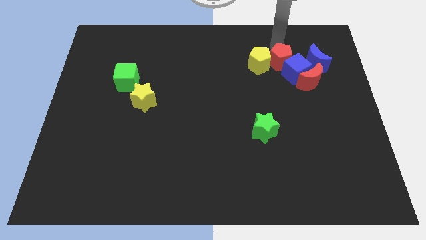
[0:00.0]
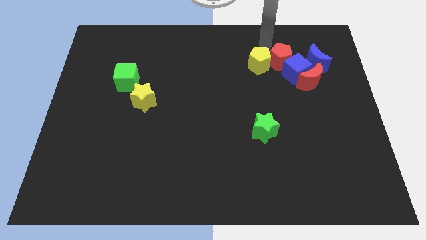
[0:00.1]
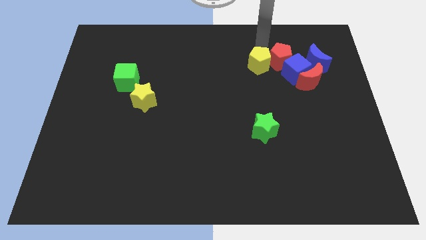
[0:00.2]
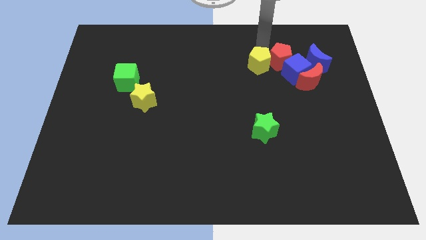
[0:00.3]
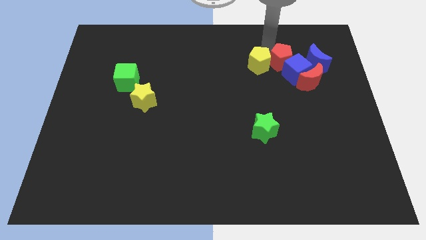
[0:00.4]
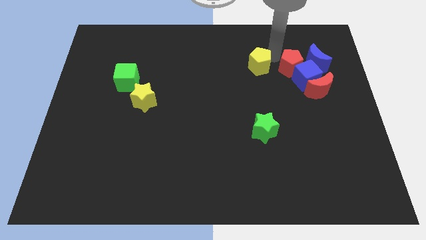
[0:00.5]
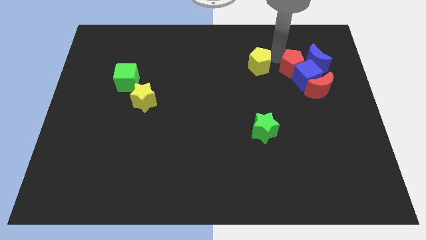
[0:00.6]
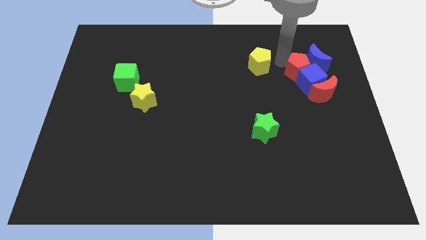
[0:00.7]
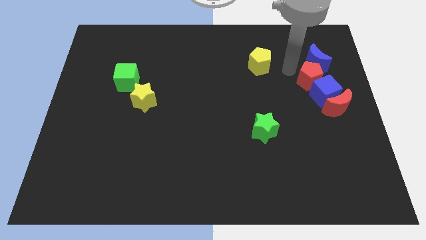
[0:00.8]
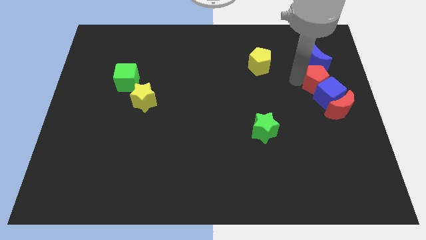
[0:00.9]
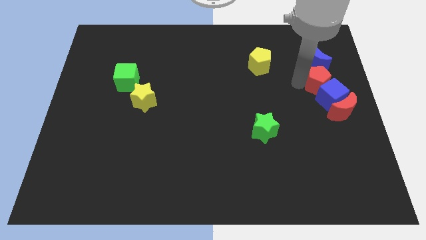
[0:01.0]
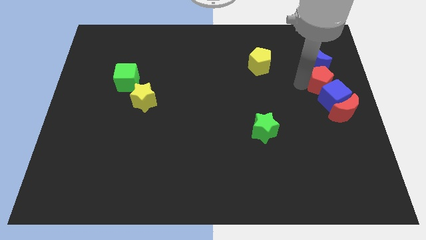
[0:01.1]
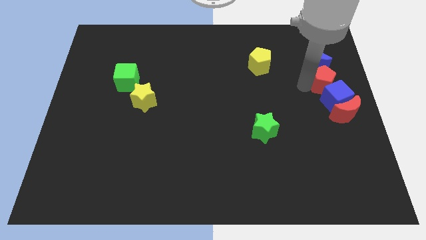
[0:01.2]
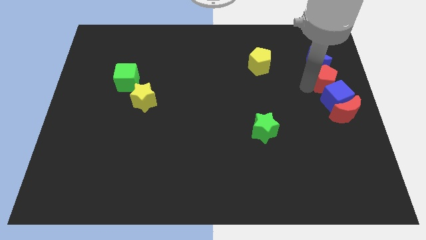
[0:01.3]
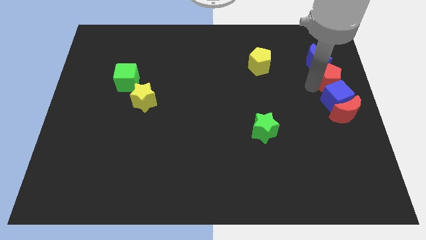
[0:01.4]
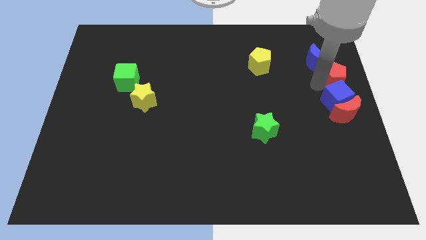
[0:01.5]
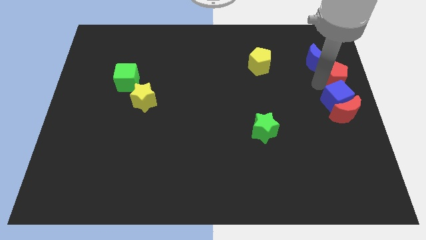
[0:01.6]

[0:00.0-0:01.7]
push the red and blue blocks to form a vertical line

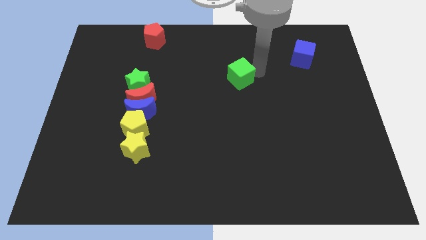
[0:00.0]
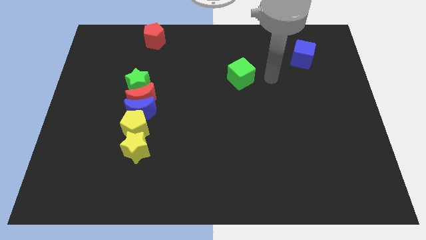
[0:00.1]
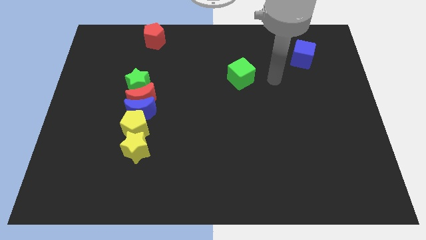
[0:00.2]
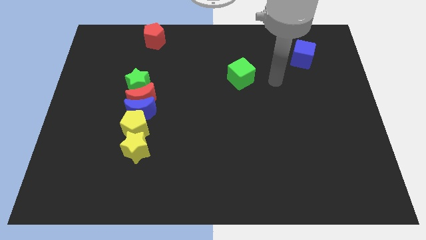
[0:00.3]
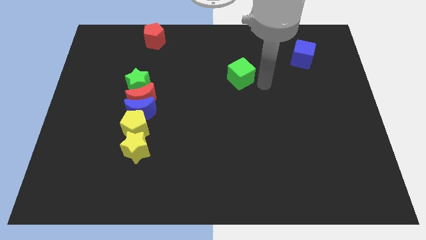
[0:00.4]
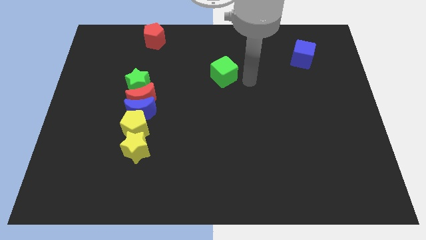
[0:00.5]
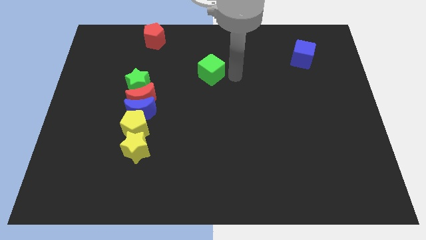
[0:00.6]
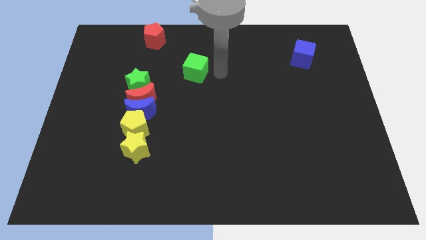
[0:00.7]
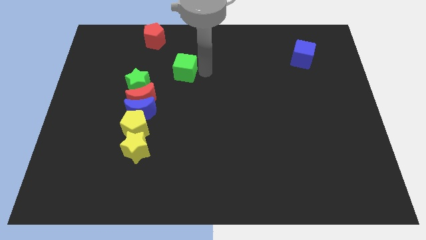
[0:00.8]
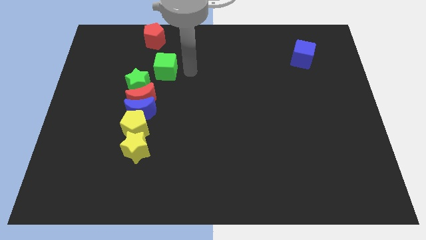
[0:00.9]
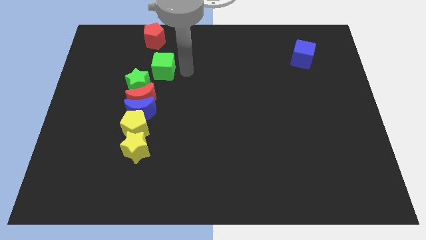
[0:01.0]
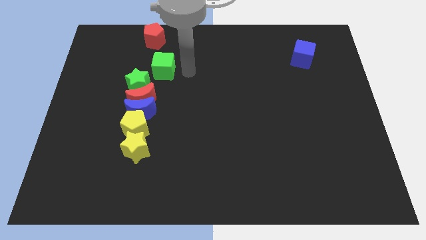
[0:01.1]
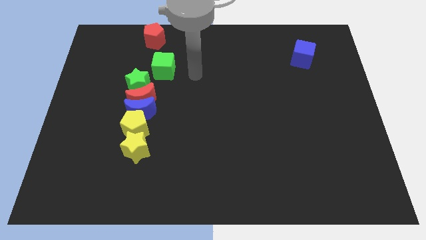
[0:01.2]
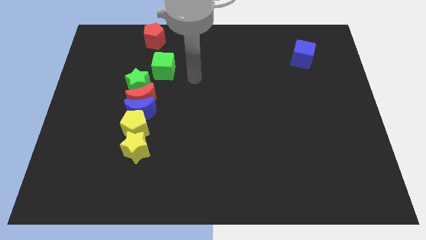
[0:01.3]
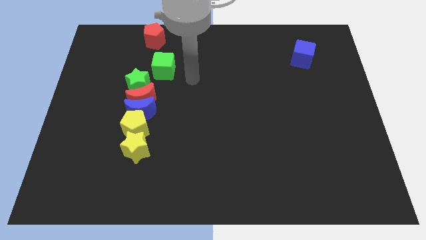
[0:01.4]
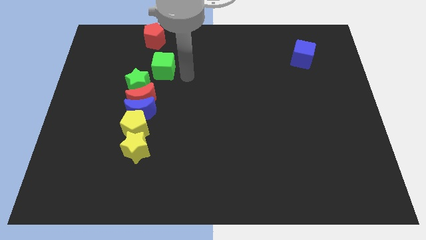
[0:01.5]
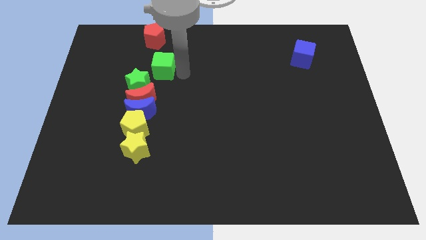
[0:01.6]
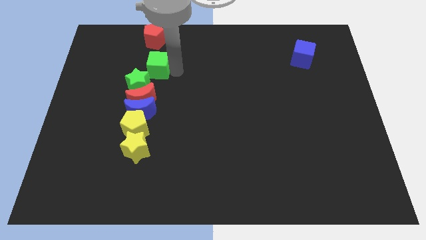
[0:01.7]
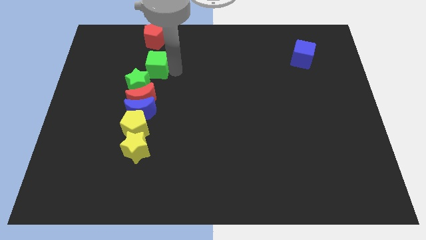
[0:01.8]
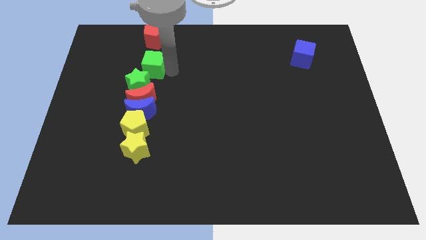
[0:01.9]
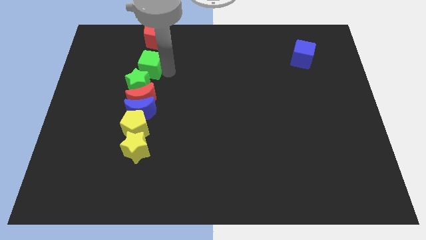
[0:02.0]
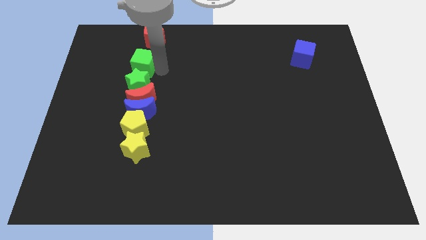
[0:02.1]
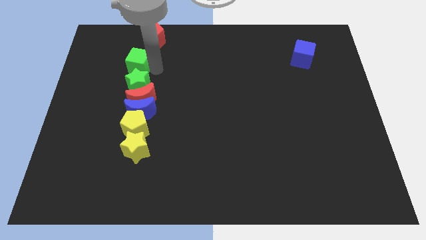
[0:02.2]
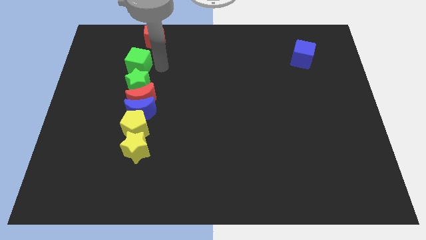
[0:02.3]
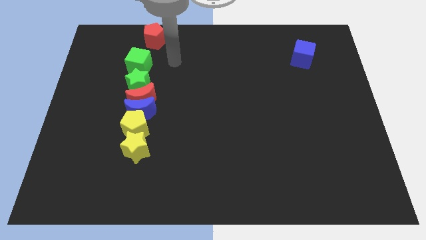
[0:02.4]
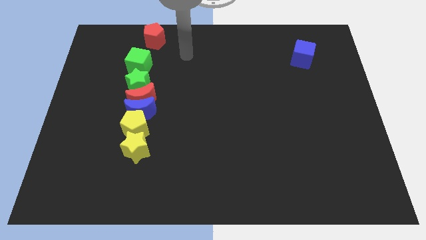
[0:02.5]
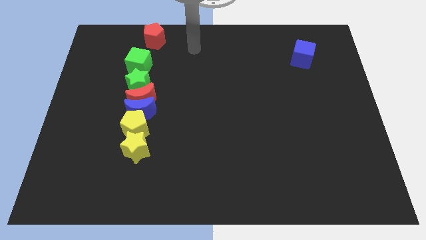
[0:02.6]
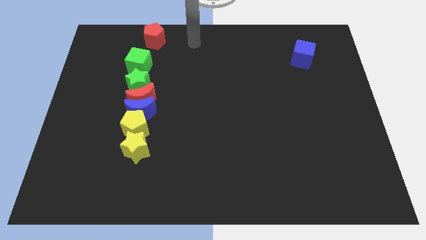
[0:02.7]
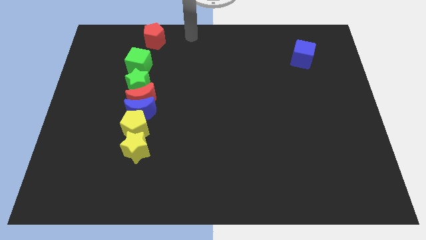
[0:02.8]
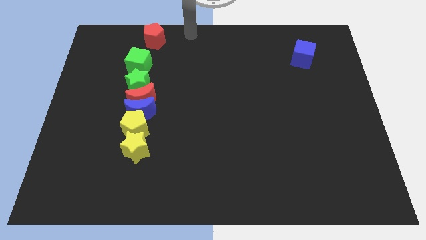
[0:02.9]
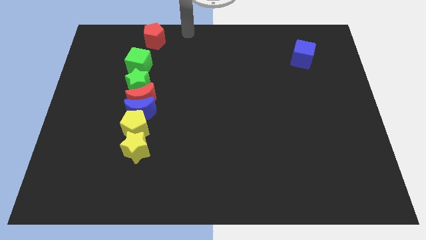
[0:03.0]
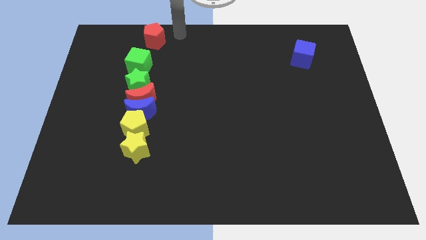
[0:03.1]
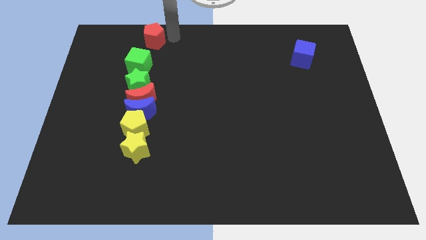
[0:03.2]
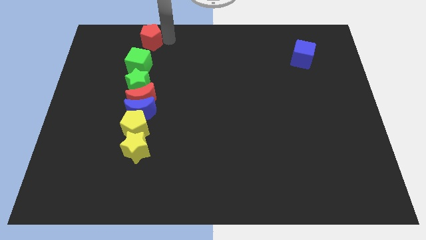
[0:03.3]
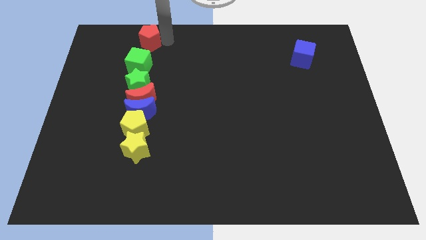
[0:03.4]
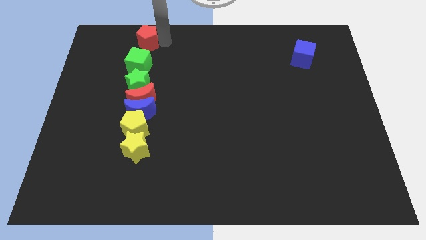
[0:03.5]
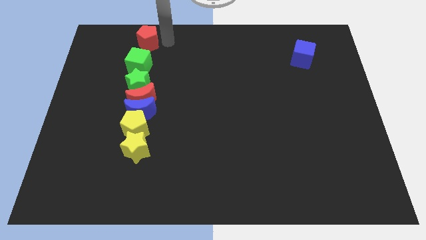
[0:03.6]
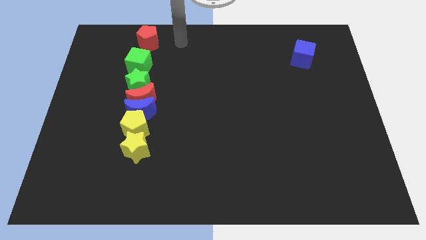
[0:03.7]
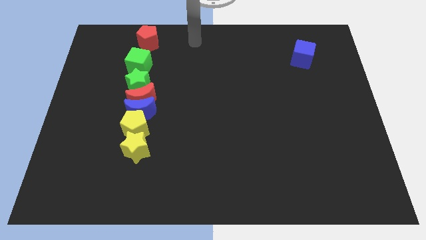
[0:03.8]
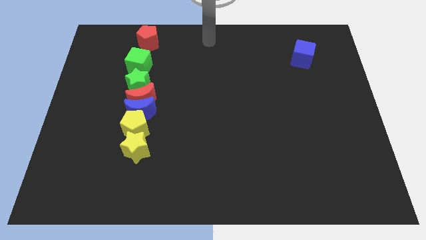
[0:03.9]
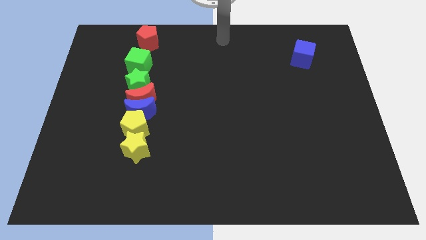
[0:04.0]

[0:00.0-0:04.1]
push the green cube and red pentagon in a vertical line

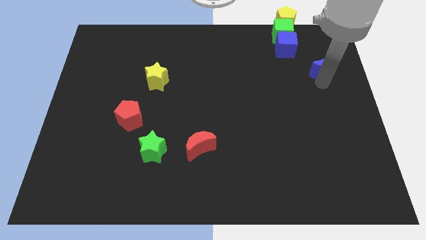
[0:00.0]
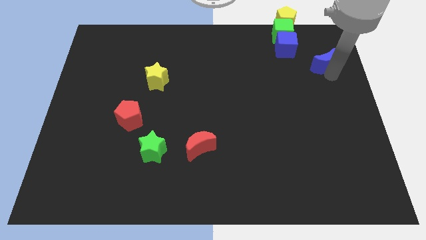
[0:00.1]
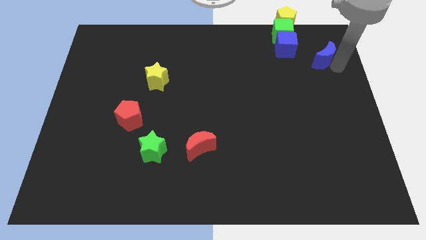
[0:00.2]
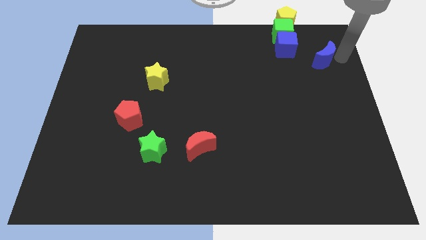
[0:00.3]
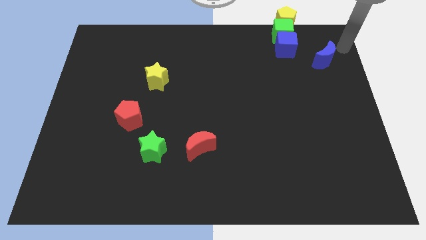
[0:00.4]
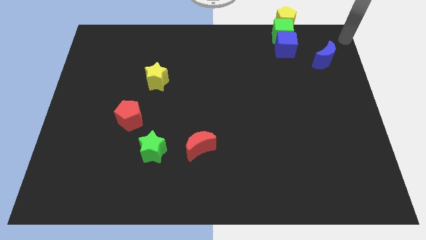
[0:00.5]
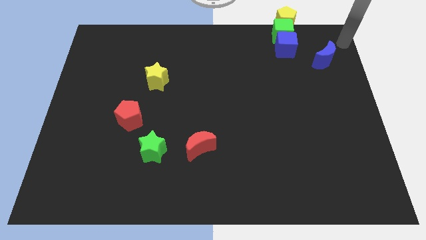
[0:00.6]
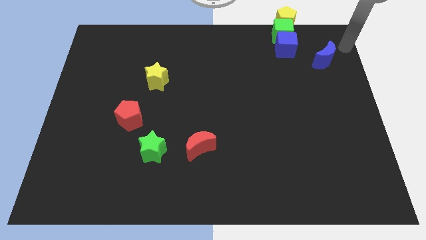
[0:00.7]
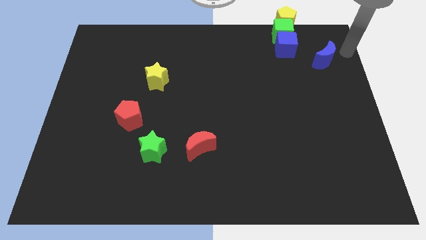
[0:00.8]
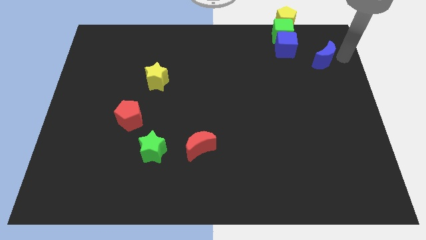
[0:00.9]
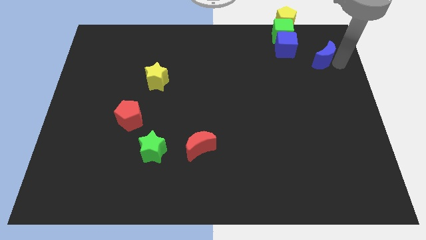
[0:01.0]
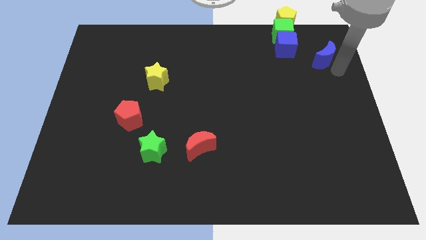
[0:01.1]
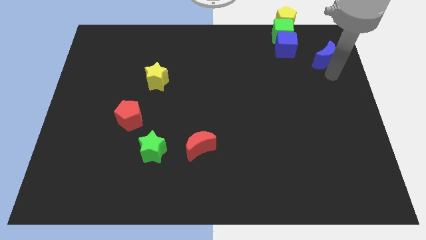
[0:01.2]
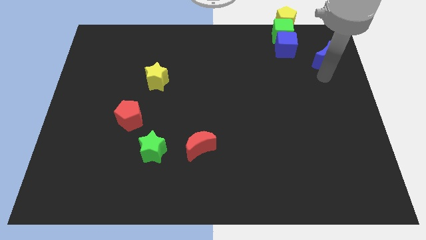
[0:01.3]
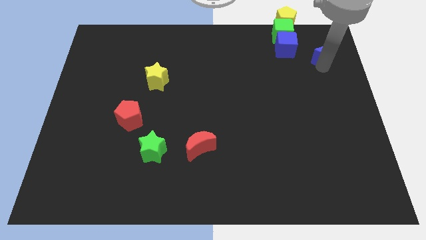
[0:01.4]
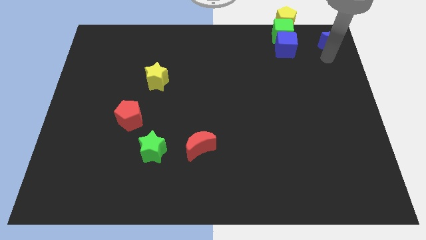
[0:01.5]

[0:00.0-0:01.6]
put the blue crescent diagonally top right to the blue cube

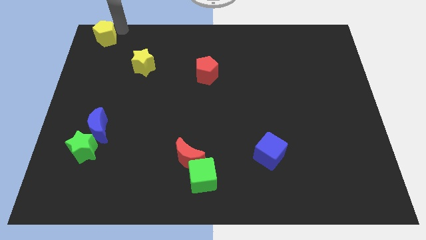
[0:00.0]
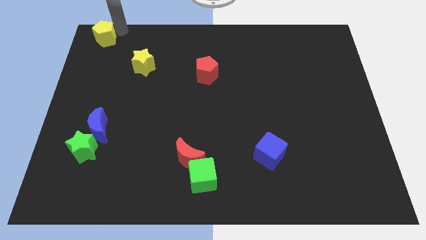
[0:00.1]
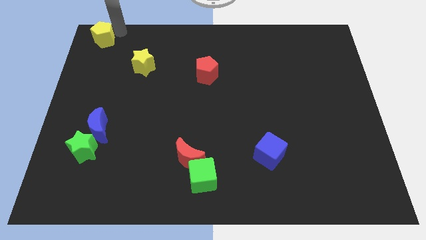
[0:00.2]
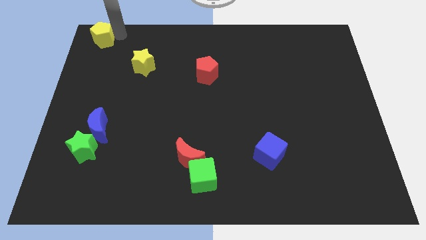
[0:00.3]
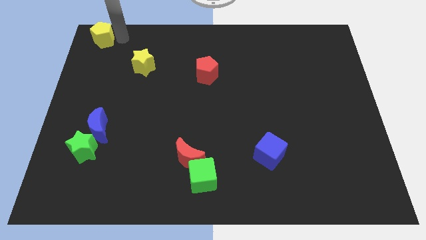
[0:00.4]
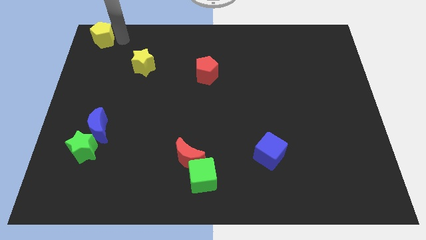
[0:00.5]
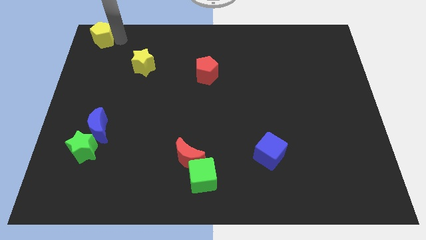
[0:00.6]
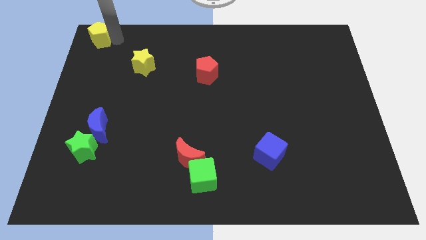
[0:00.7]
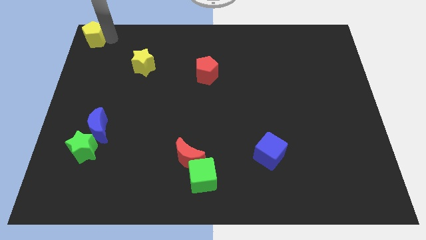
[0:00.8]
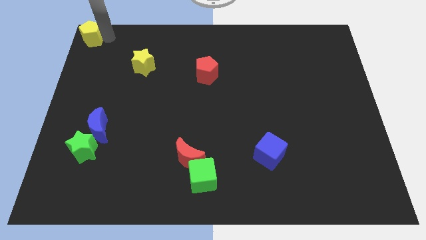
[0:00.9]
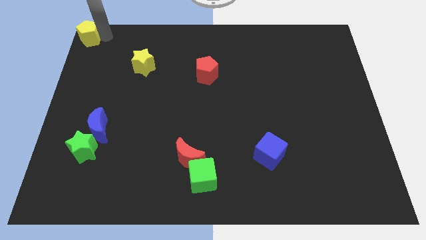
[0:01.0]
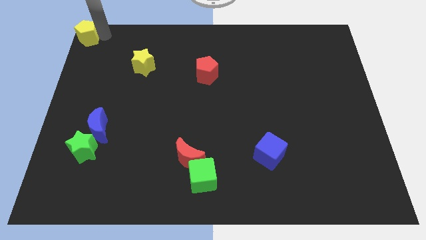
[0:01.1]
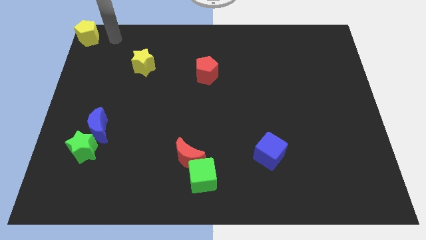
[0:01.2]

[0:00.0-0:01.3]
place the yellow pentagon at the top left corner of the board
